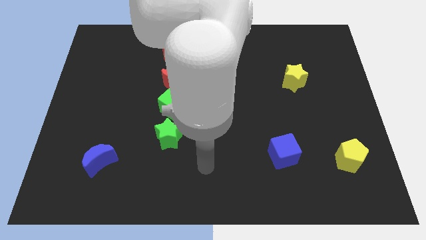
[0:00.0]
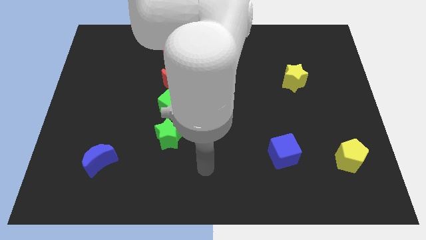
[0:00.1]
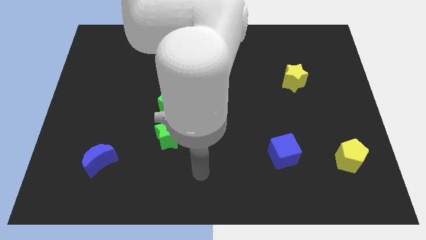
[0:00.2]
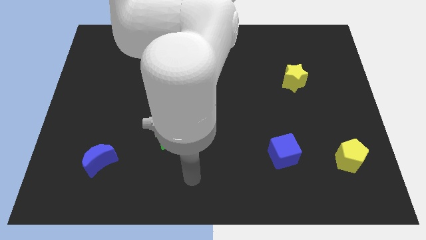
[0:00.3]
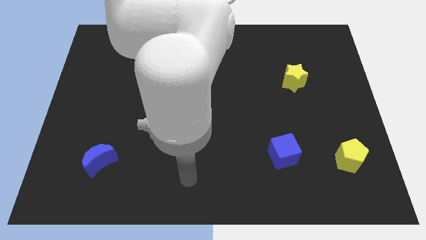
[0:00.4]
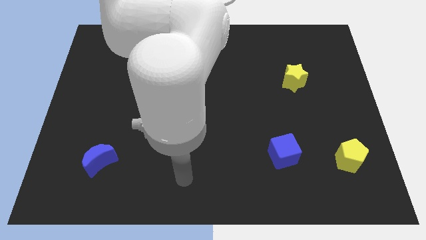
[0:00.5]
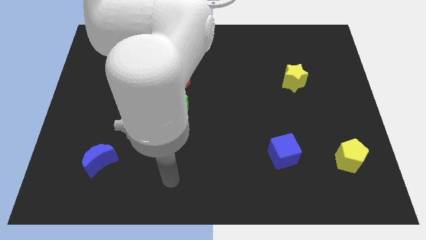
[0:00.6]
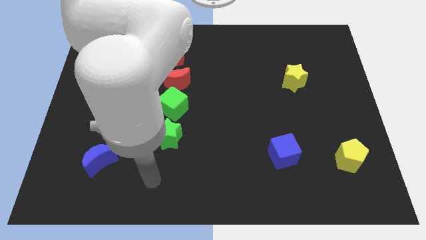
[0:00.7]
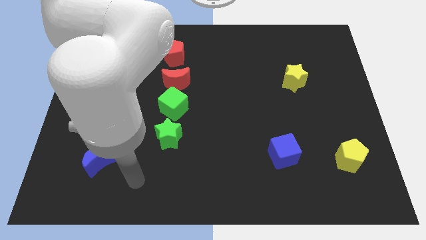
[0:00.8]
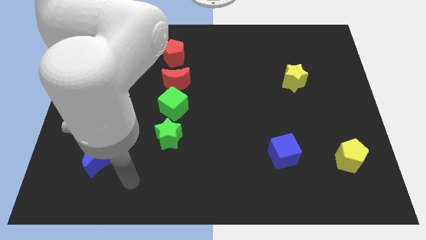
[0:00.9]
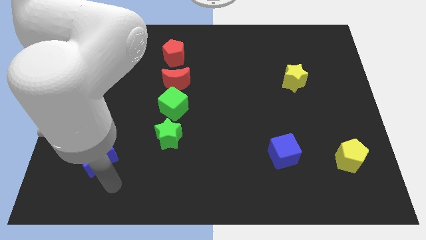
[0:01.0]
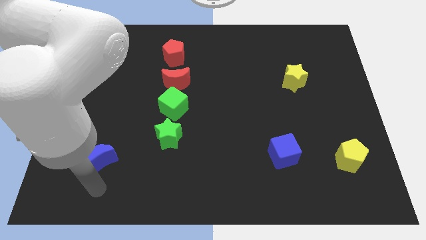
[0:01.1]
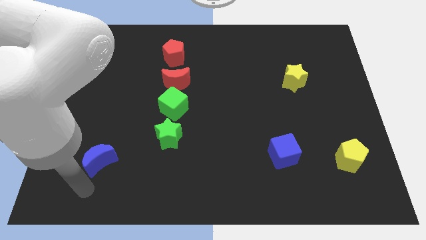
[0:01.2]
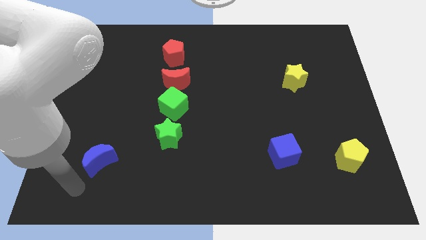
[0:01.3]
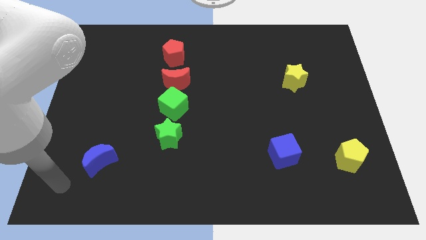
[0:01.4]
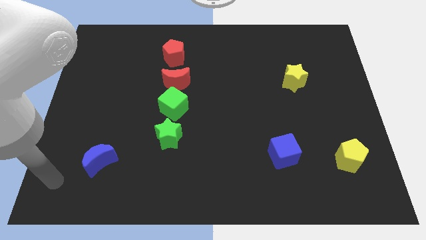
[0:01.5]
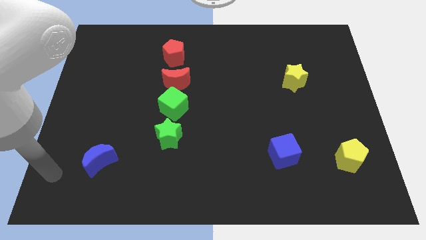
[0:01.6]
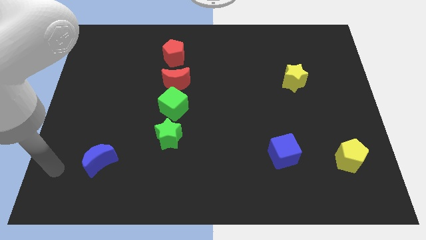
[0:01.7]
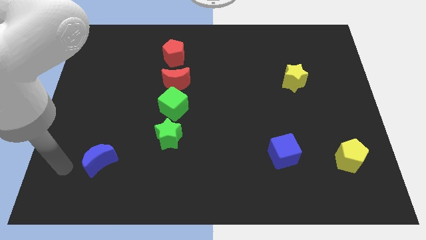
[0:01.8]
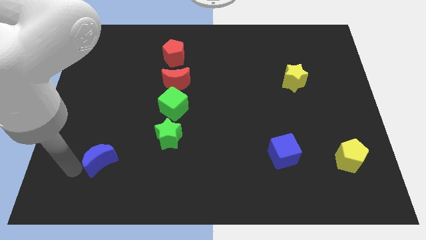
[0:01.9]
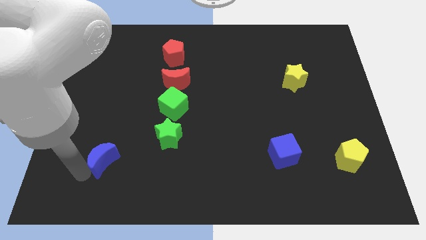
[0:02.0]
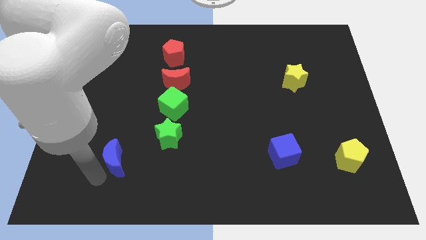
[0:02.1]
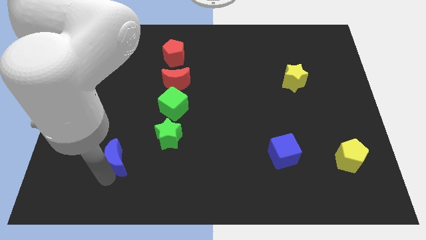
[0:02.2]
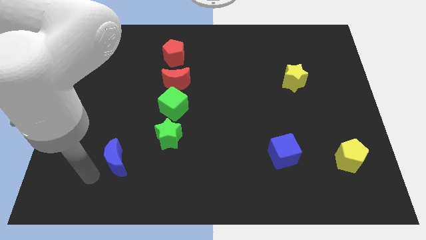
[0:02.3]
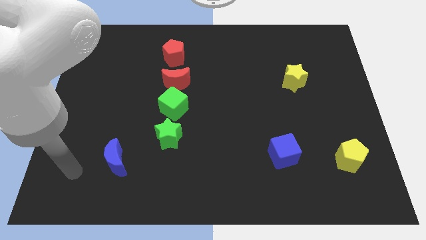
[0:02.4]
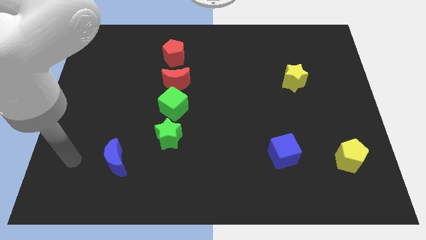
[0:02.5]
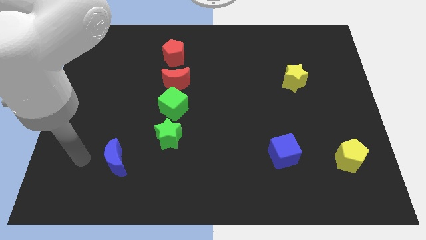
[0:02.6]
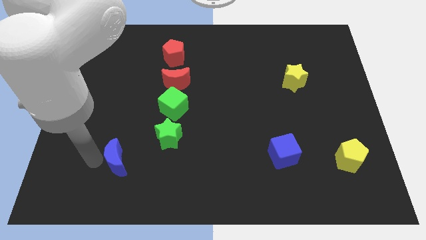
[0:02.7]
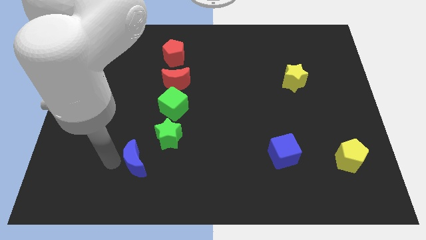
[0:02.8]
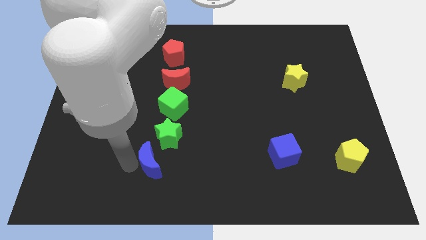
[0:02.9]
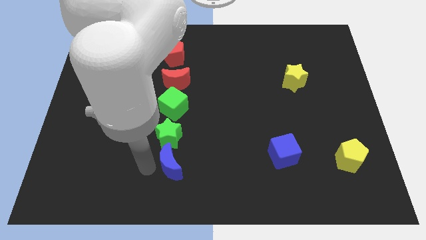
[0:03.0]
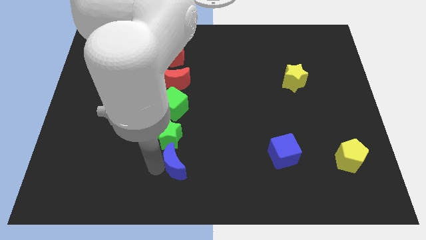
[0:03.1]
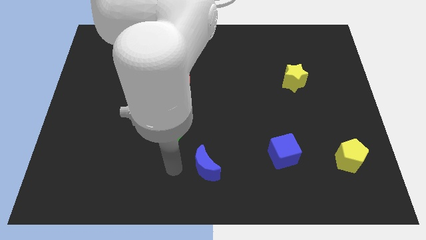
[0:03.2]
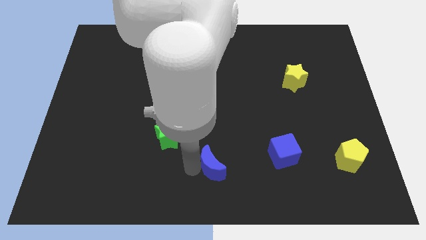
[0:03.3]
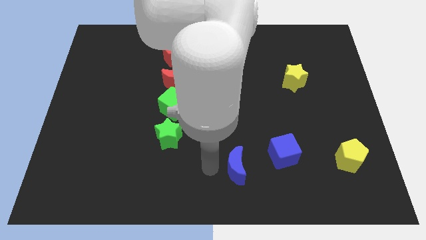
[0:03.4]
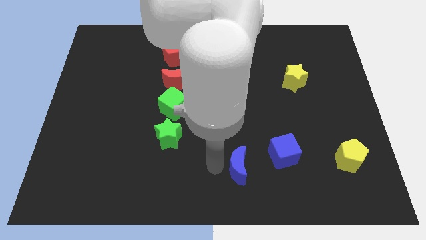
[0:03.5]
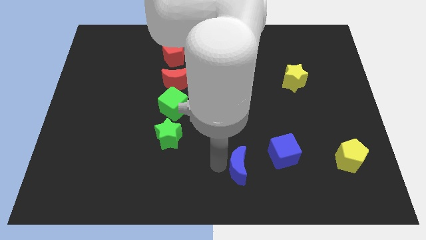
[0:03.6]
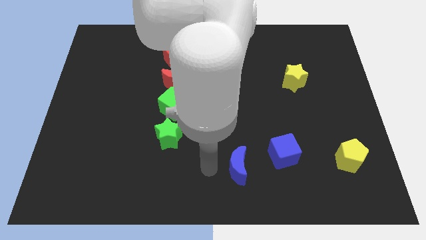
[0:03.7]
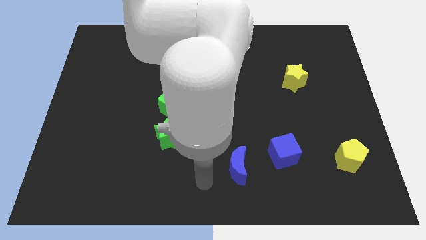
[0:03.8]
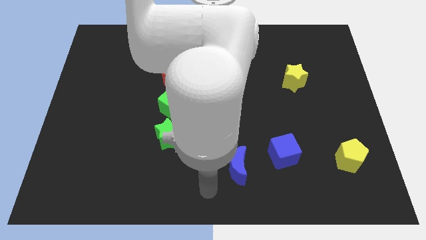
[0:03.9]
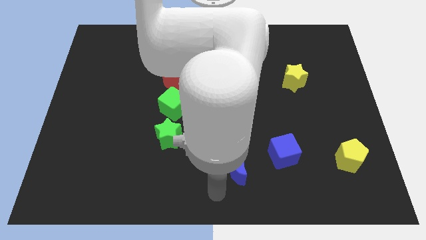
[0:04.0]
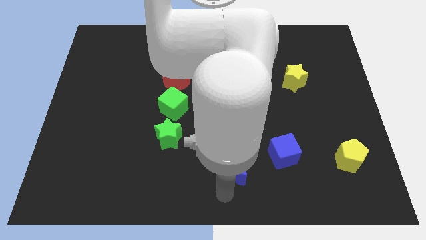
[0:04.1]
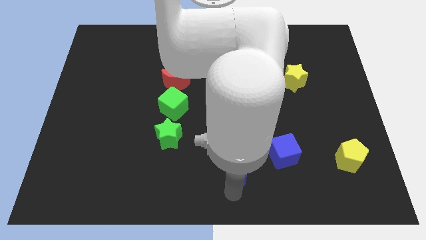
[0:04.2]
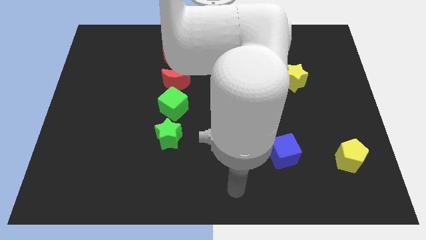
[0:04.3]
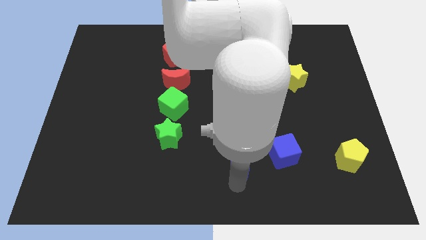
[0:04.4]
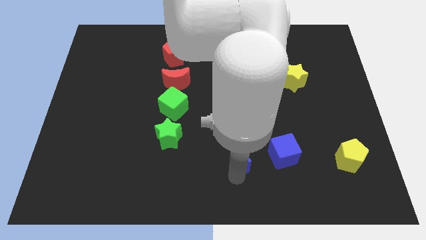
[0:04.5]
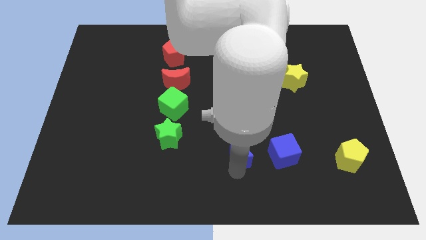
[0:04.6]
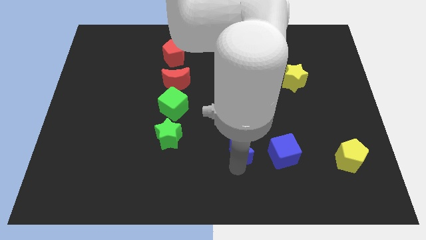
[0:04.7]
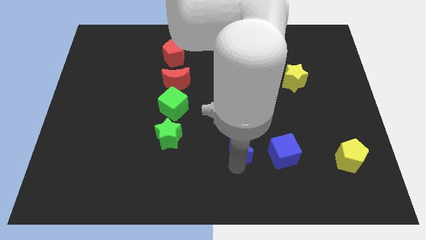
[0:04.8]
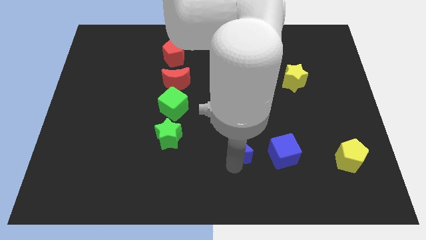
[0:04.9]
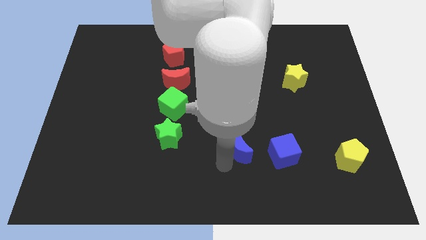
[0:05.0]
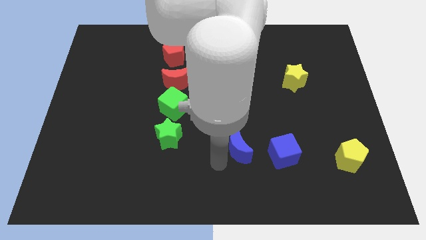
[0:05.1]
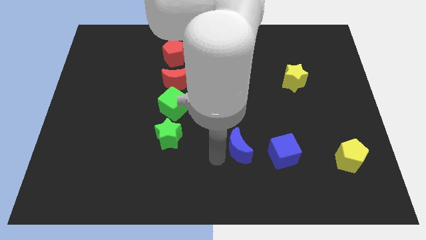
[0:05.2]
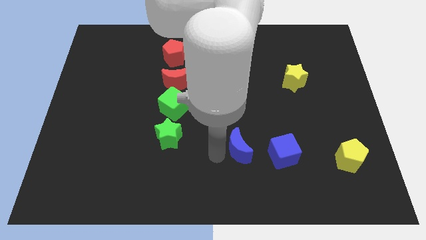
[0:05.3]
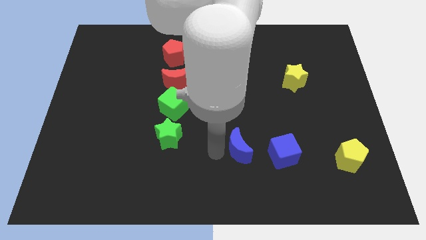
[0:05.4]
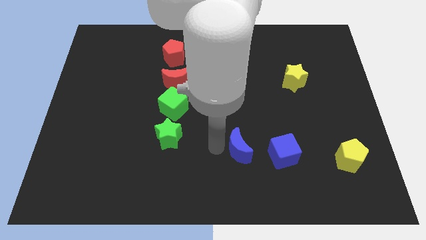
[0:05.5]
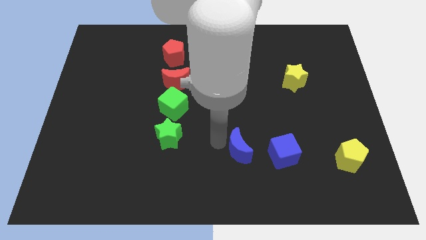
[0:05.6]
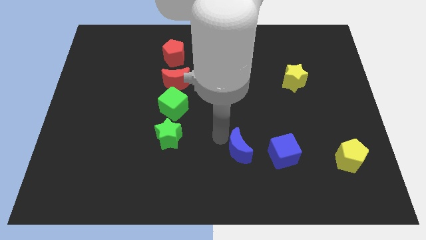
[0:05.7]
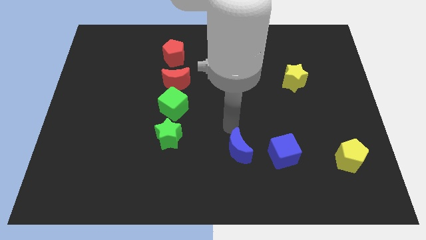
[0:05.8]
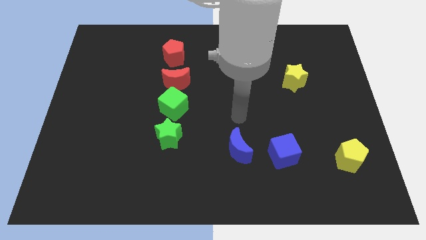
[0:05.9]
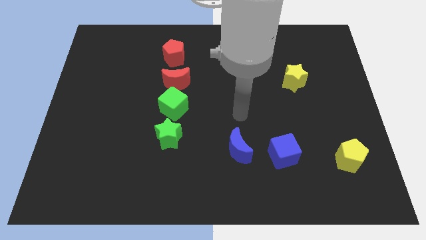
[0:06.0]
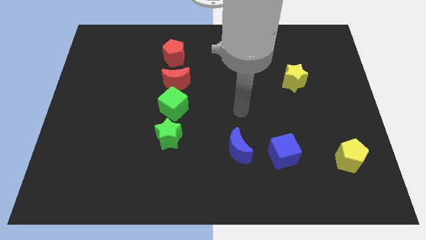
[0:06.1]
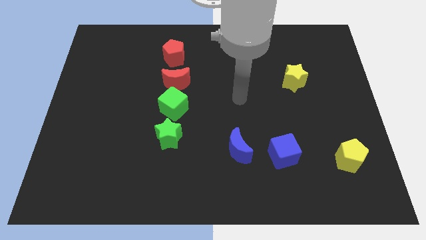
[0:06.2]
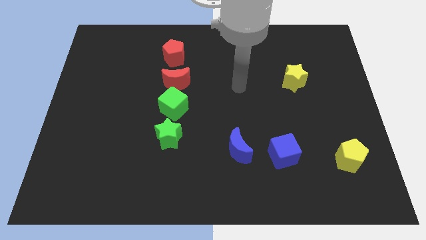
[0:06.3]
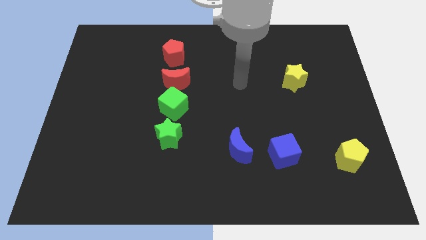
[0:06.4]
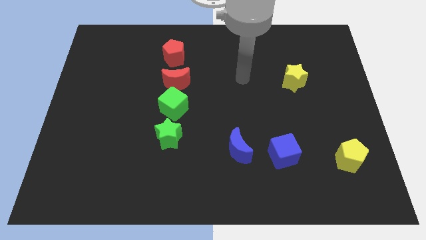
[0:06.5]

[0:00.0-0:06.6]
move the blue moon to the left side of the blue cube

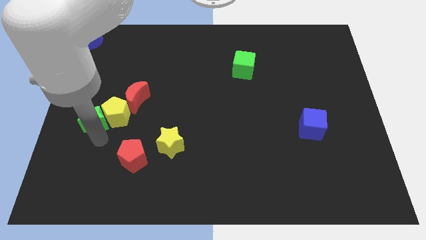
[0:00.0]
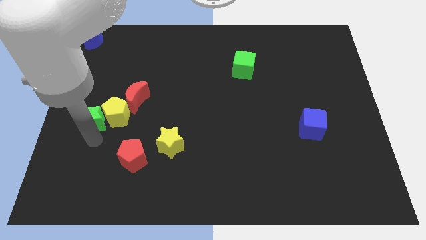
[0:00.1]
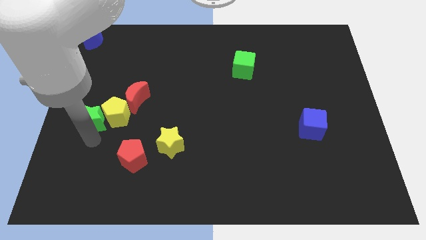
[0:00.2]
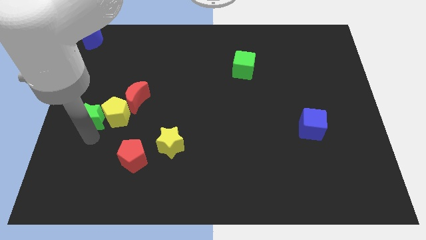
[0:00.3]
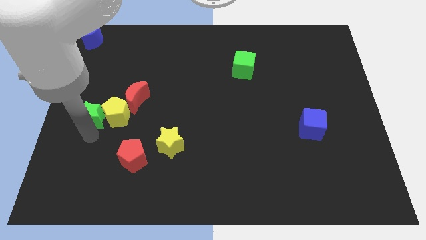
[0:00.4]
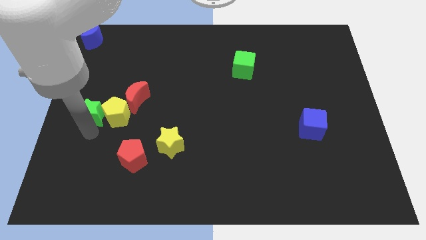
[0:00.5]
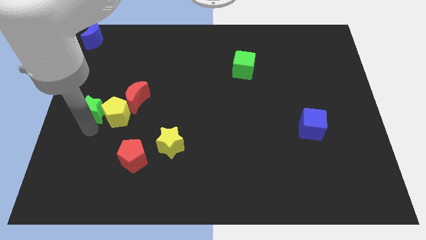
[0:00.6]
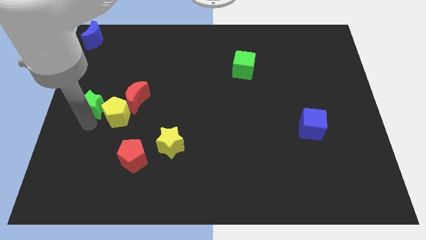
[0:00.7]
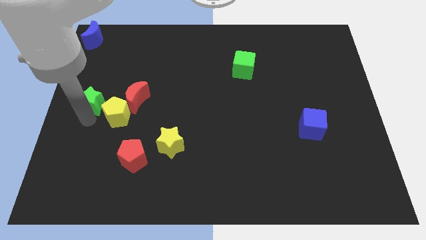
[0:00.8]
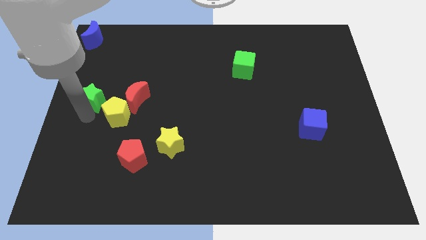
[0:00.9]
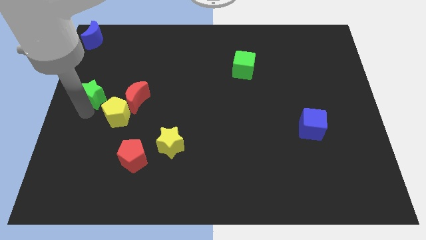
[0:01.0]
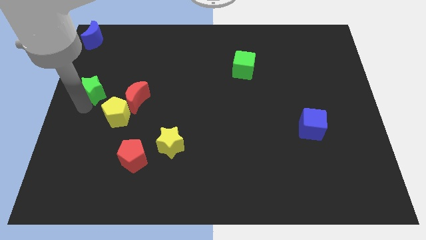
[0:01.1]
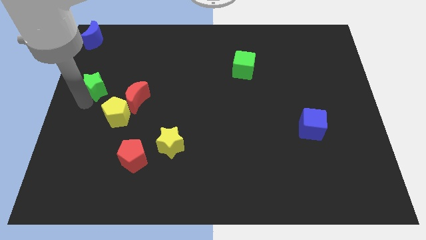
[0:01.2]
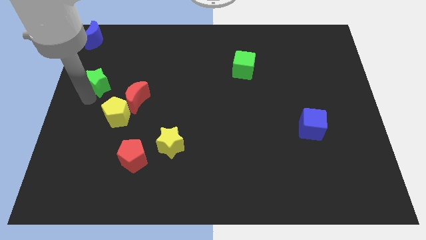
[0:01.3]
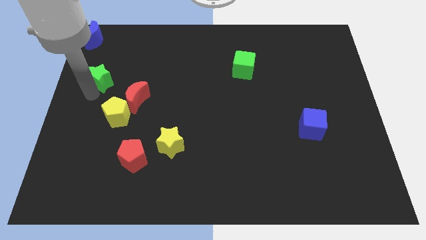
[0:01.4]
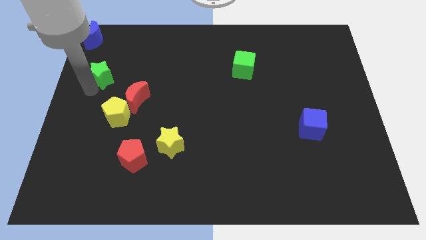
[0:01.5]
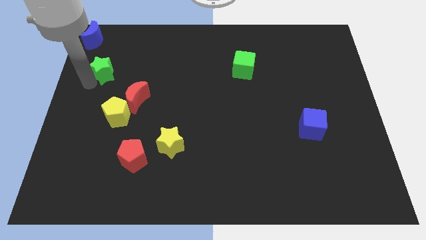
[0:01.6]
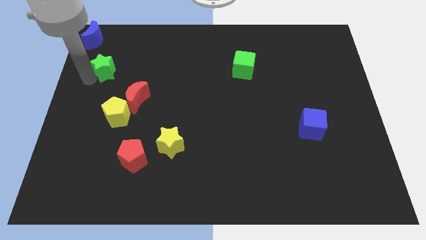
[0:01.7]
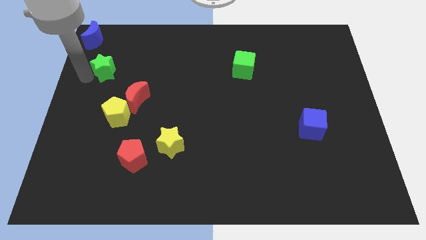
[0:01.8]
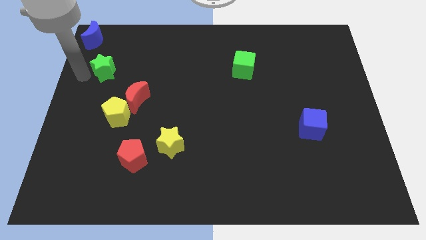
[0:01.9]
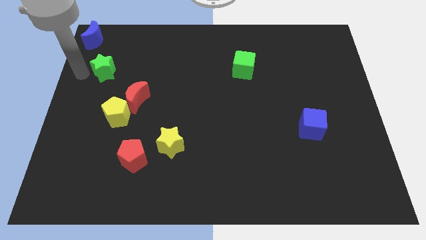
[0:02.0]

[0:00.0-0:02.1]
place the green star in between blue crescent and yellow pentagon
